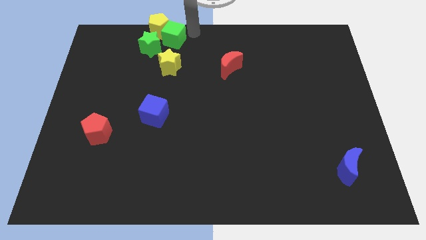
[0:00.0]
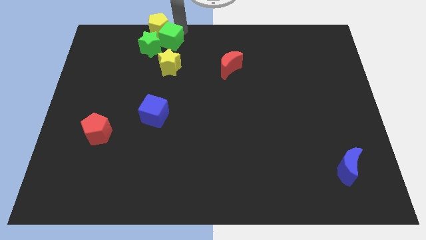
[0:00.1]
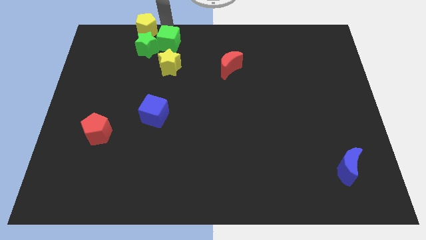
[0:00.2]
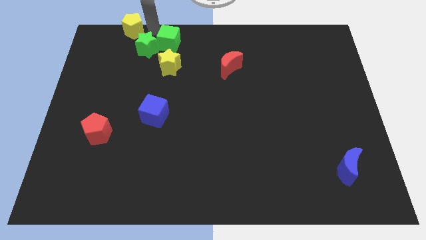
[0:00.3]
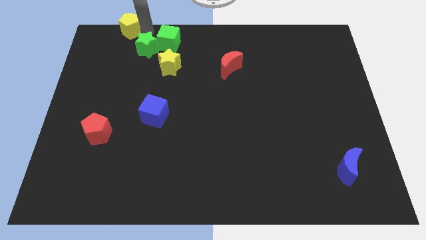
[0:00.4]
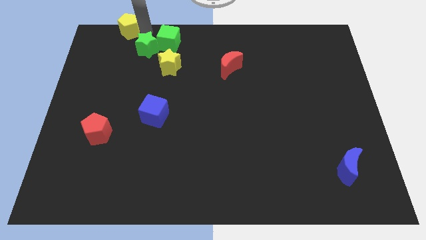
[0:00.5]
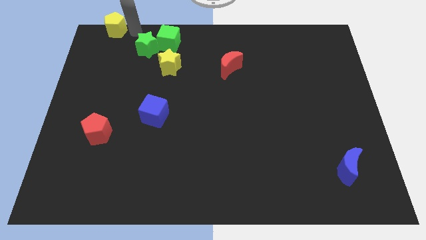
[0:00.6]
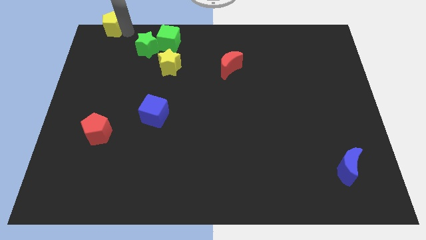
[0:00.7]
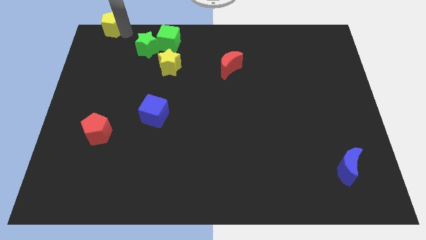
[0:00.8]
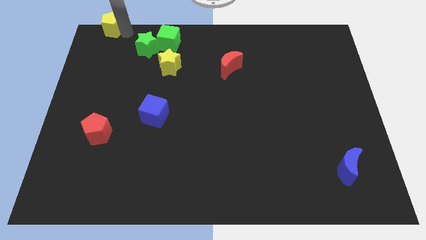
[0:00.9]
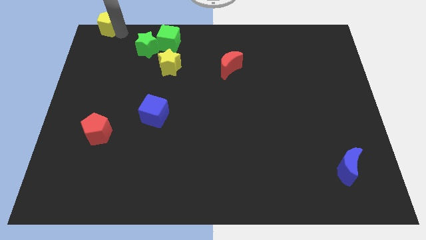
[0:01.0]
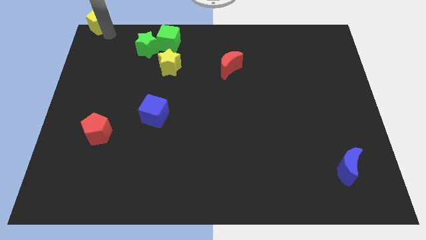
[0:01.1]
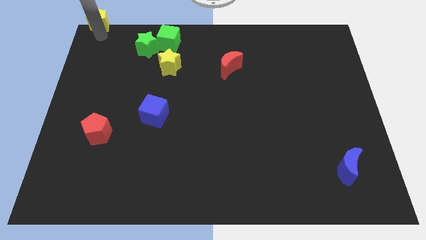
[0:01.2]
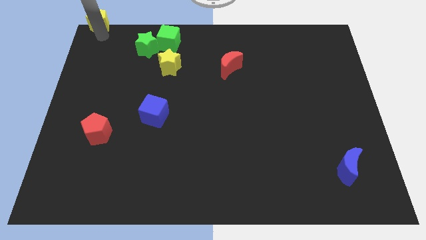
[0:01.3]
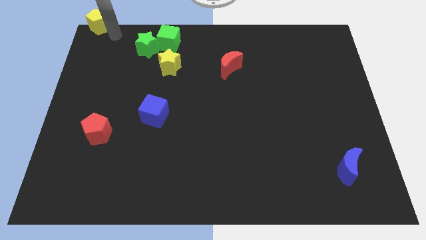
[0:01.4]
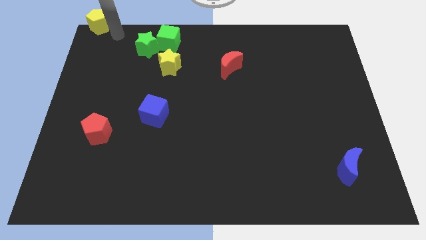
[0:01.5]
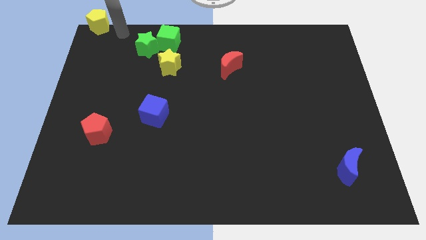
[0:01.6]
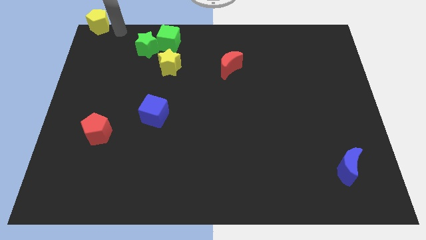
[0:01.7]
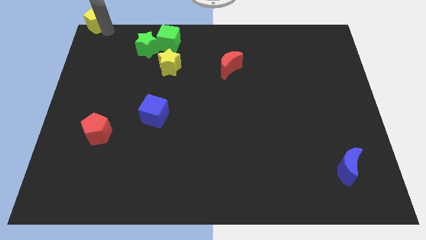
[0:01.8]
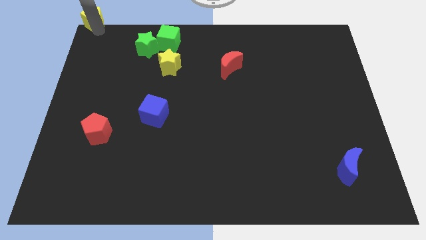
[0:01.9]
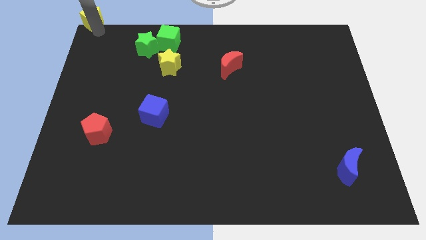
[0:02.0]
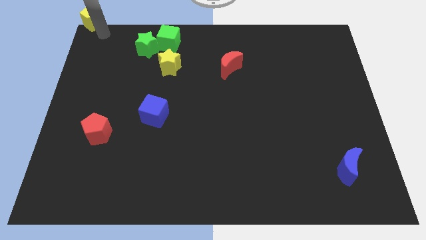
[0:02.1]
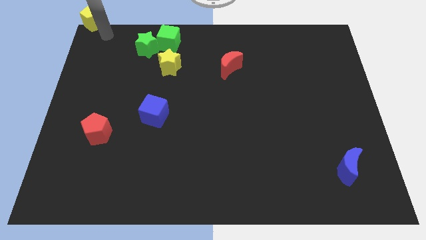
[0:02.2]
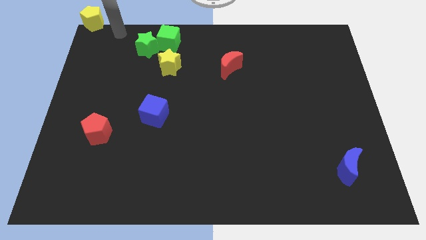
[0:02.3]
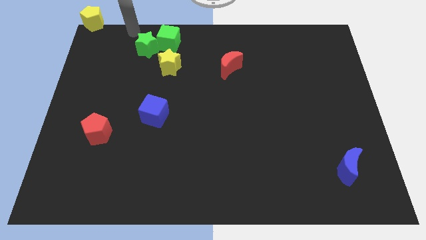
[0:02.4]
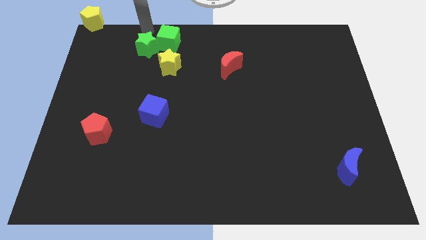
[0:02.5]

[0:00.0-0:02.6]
move the yellow pentagon to the top left corner of the board

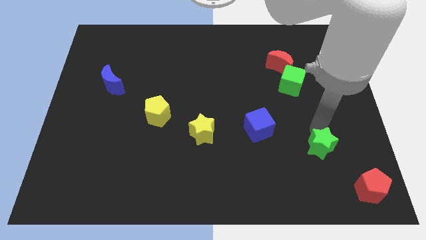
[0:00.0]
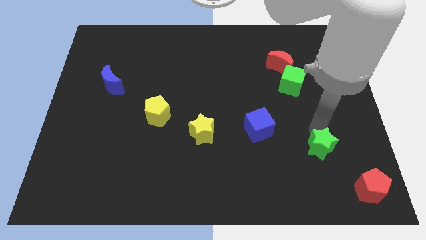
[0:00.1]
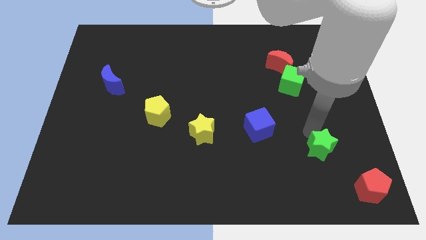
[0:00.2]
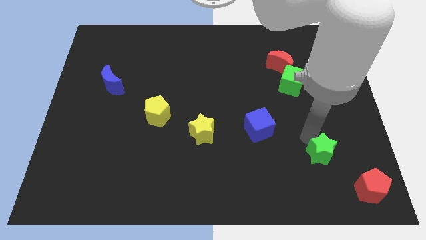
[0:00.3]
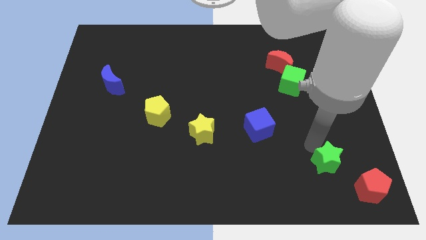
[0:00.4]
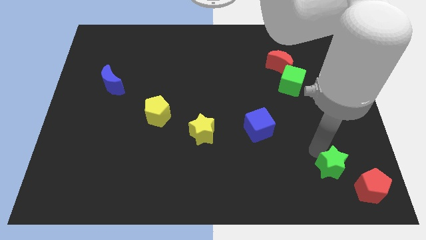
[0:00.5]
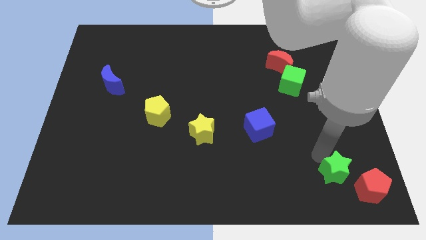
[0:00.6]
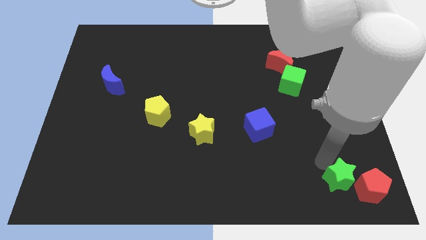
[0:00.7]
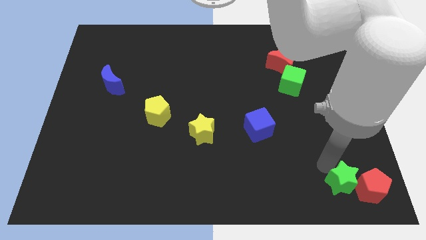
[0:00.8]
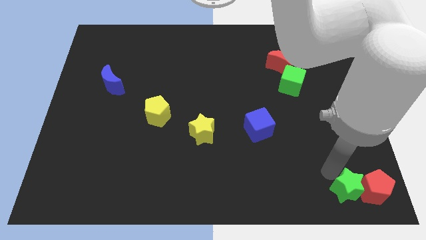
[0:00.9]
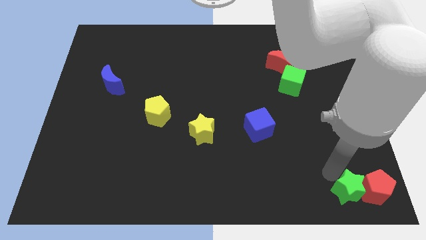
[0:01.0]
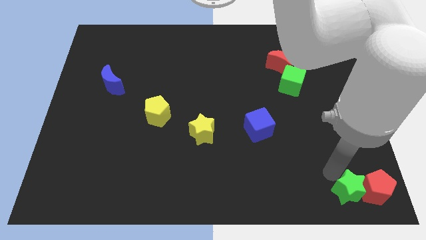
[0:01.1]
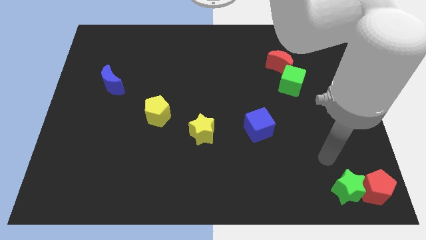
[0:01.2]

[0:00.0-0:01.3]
place the green star to the bottom right corner of the board

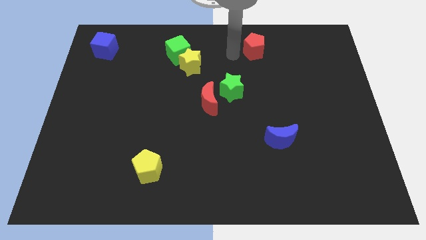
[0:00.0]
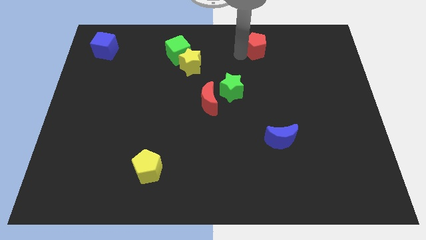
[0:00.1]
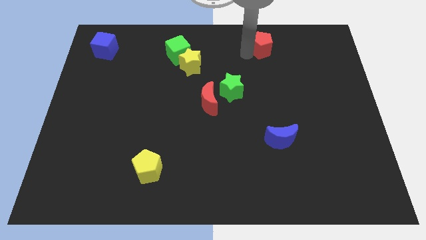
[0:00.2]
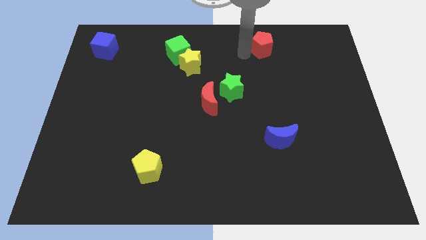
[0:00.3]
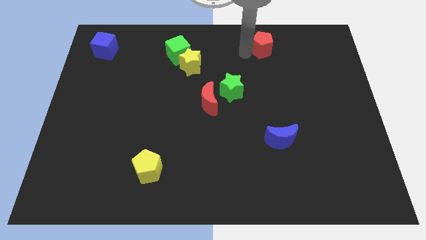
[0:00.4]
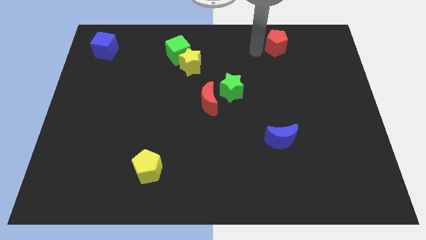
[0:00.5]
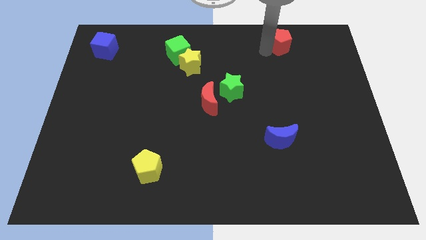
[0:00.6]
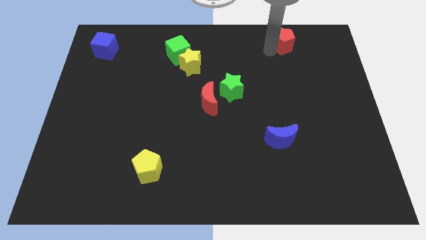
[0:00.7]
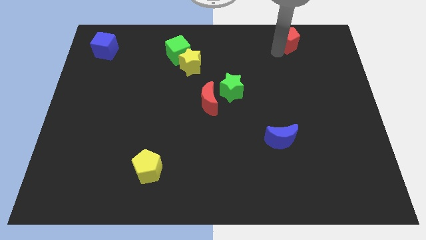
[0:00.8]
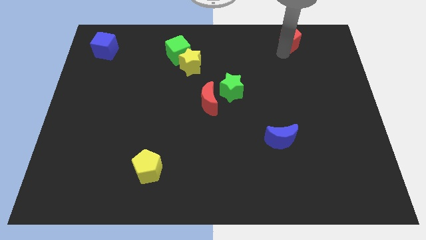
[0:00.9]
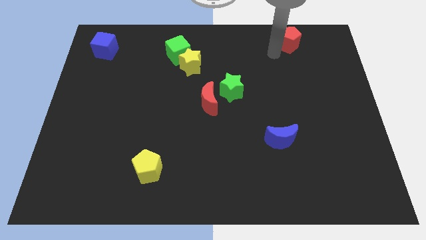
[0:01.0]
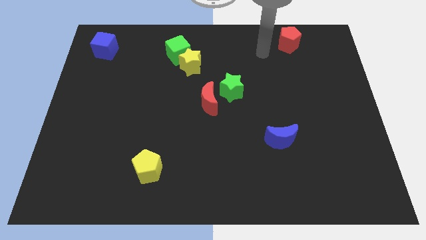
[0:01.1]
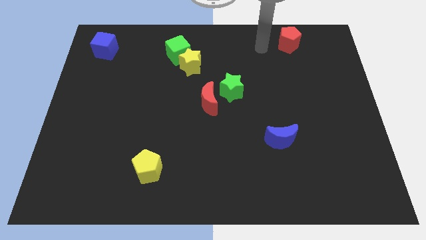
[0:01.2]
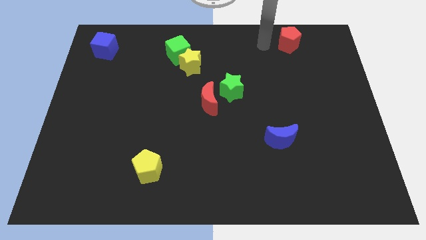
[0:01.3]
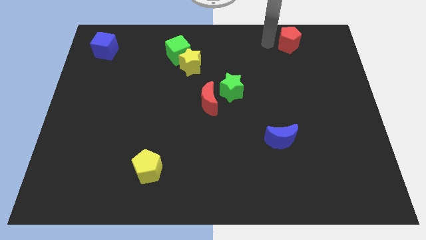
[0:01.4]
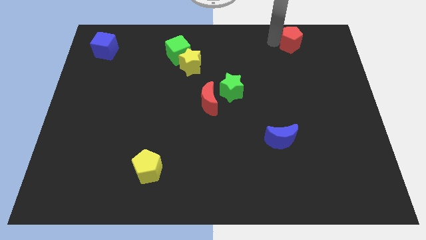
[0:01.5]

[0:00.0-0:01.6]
slide the red pentagon to the right

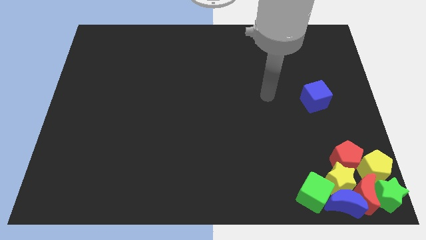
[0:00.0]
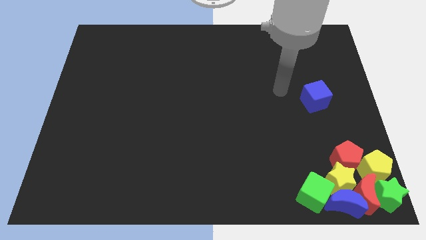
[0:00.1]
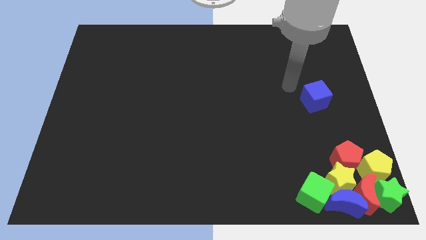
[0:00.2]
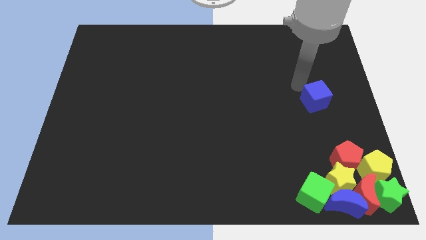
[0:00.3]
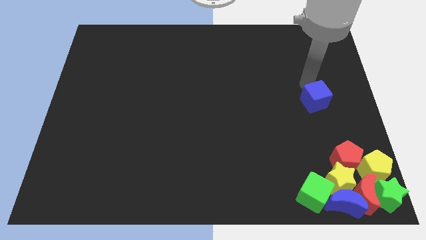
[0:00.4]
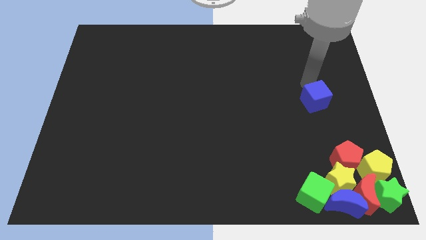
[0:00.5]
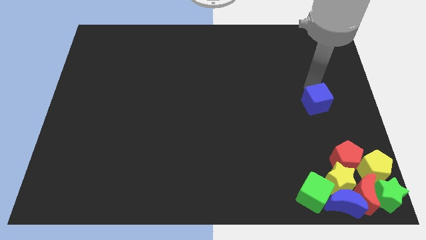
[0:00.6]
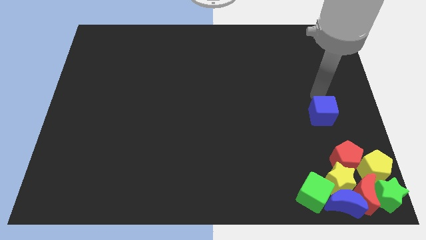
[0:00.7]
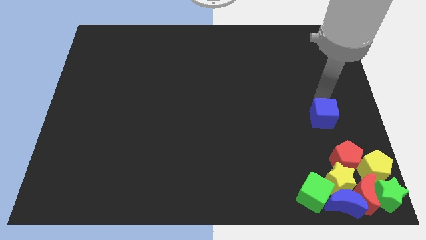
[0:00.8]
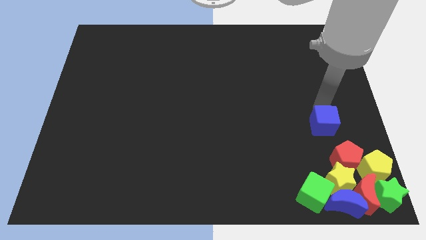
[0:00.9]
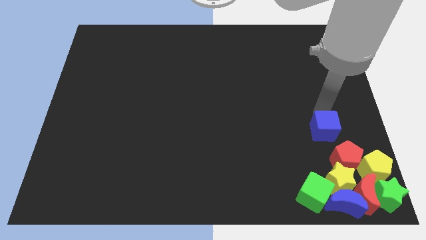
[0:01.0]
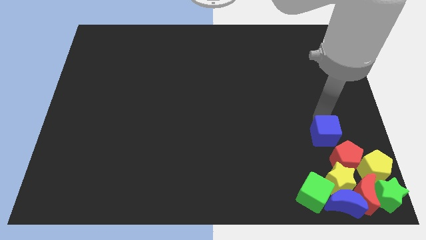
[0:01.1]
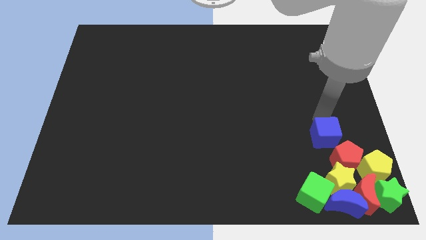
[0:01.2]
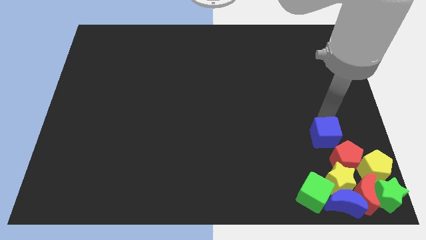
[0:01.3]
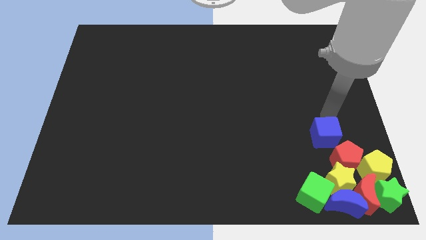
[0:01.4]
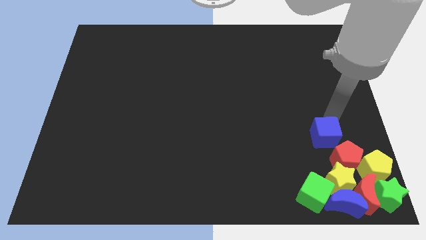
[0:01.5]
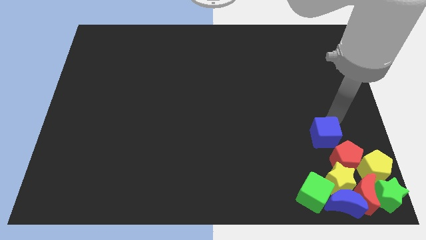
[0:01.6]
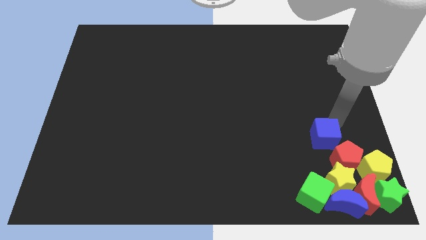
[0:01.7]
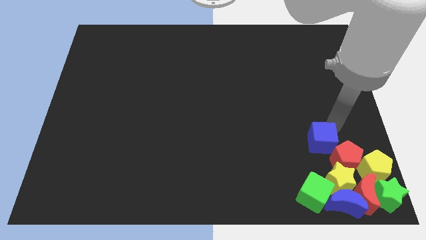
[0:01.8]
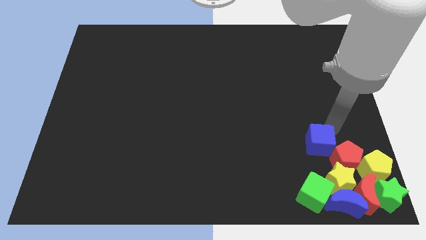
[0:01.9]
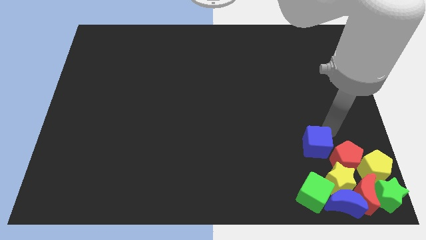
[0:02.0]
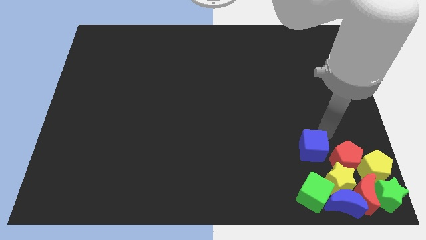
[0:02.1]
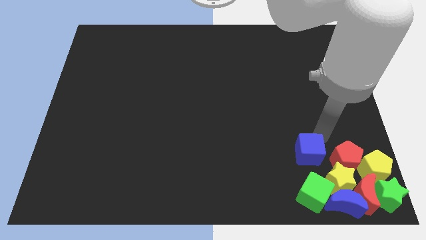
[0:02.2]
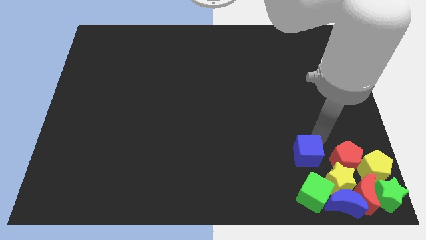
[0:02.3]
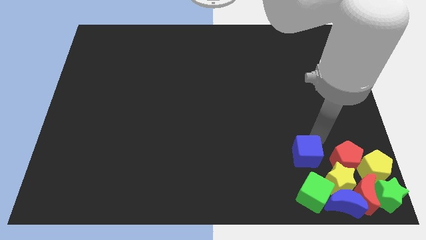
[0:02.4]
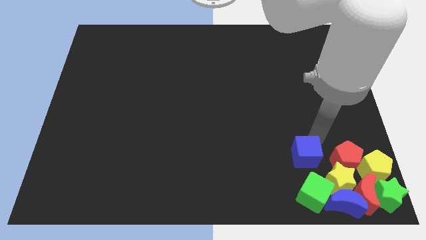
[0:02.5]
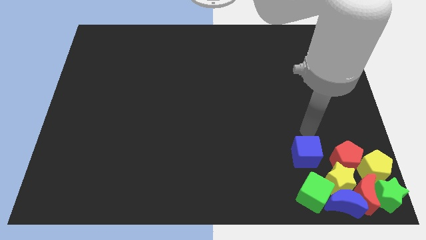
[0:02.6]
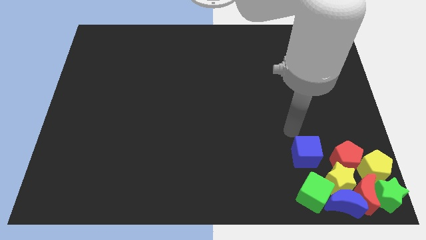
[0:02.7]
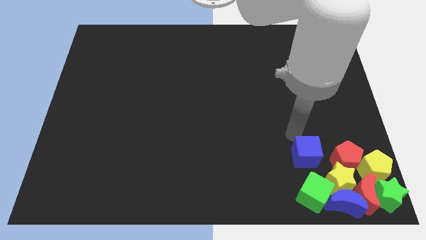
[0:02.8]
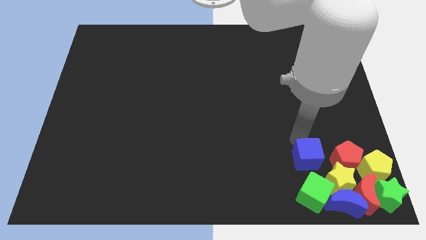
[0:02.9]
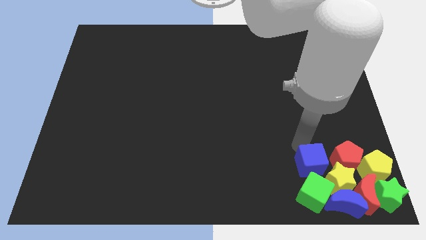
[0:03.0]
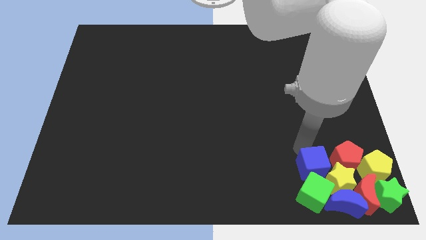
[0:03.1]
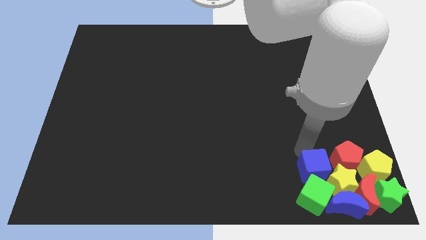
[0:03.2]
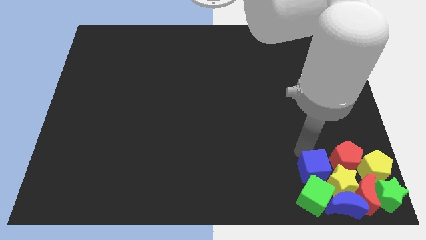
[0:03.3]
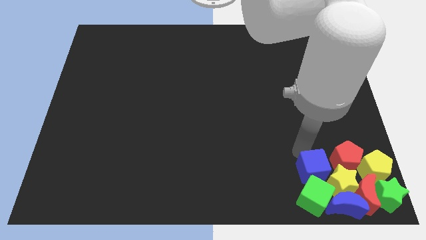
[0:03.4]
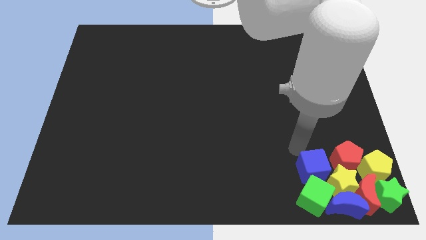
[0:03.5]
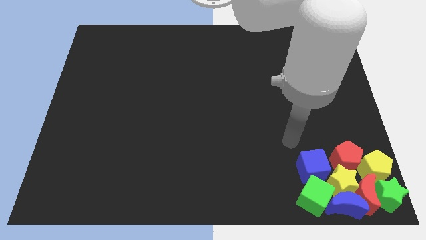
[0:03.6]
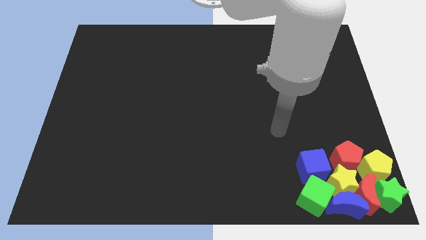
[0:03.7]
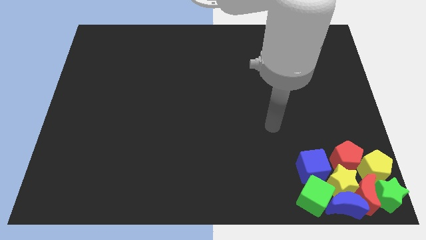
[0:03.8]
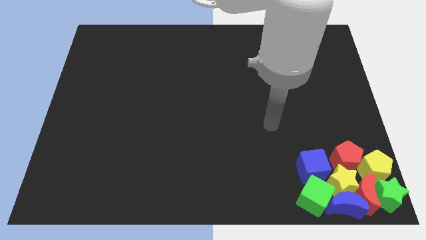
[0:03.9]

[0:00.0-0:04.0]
place the blue cube above the green cube
